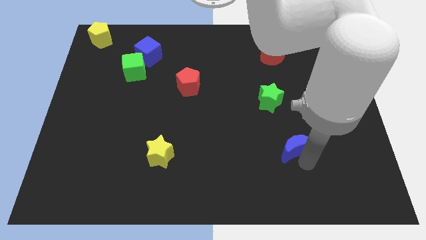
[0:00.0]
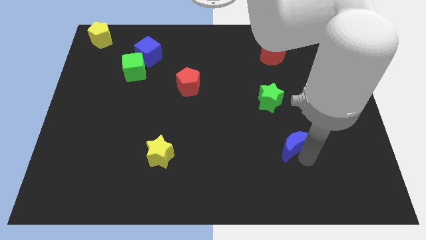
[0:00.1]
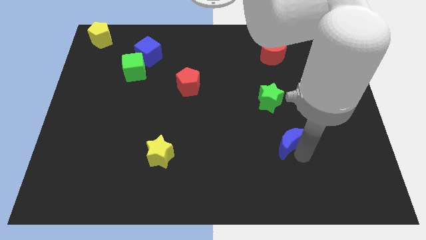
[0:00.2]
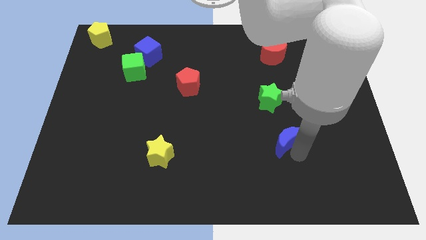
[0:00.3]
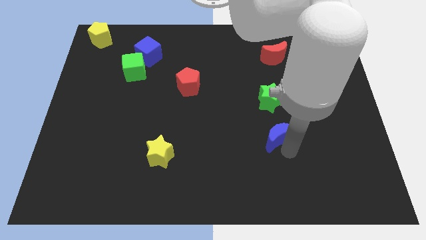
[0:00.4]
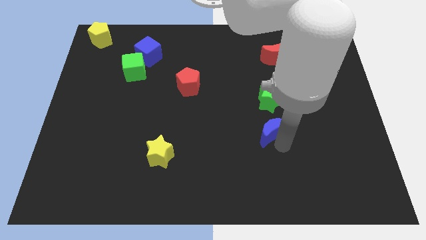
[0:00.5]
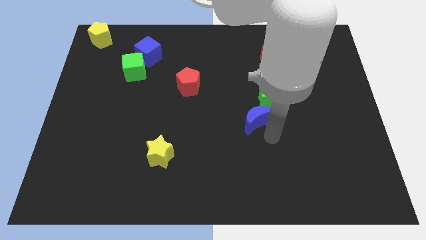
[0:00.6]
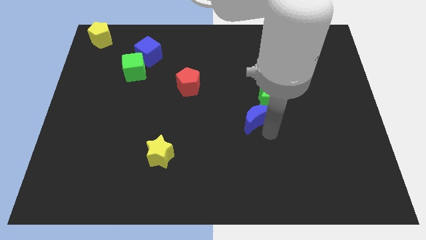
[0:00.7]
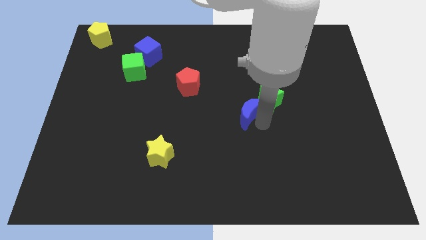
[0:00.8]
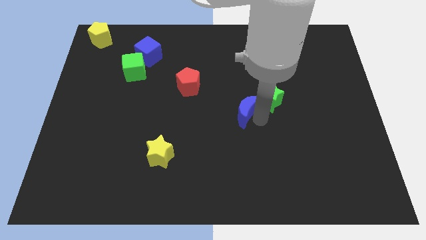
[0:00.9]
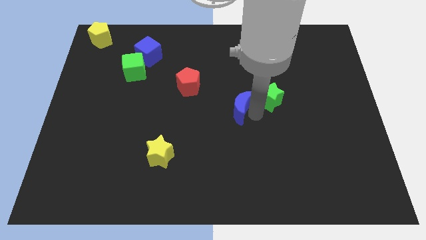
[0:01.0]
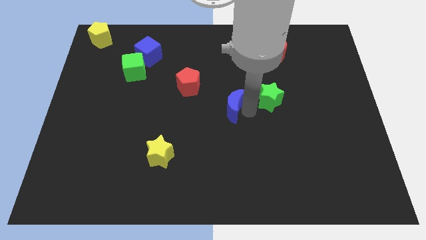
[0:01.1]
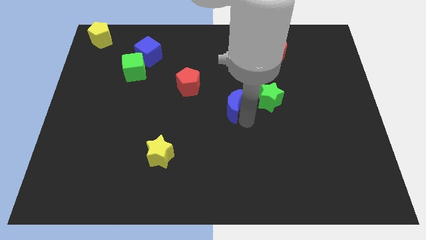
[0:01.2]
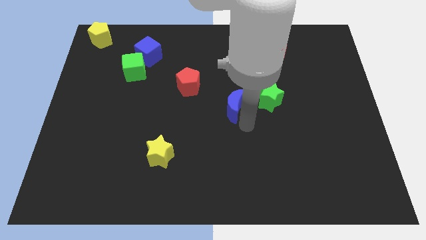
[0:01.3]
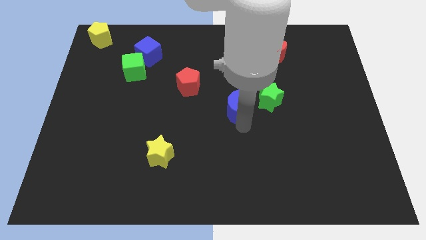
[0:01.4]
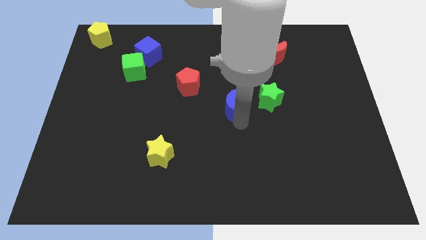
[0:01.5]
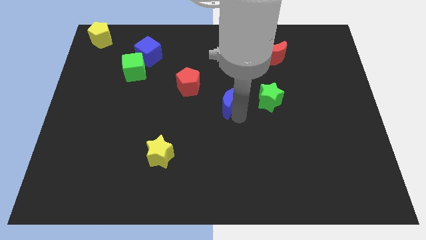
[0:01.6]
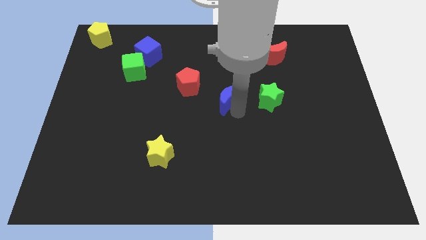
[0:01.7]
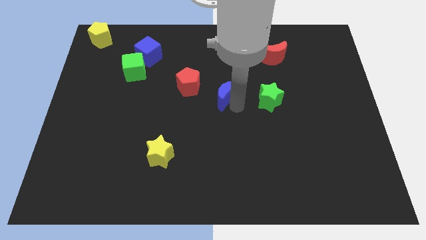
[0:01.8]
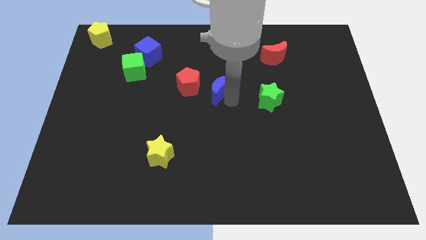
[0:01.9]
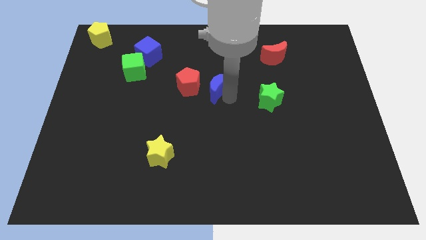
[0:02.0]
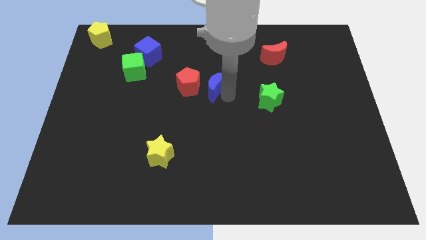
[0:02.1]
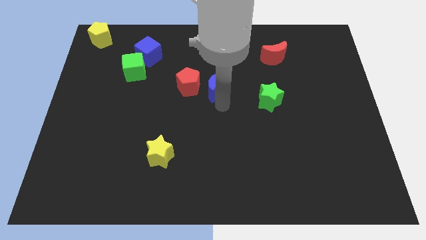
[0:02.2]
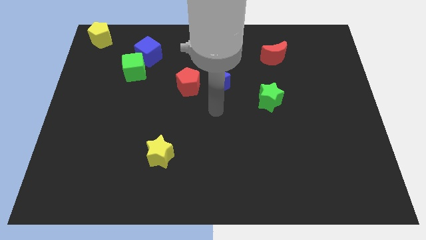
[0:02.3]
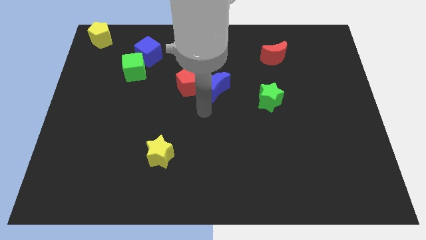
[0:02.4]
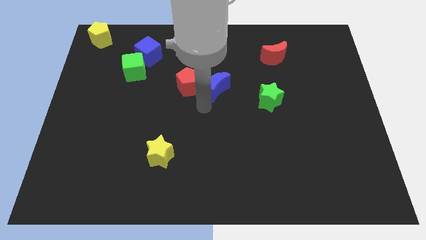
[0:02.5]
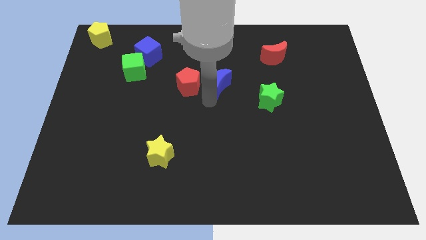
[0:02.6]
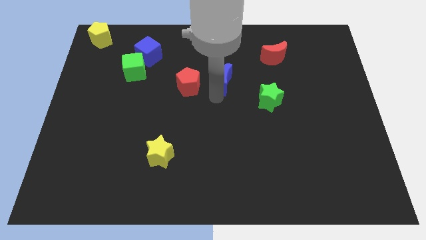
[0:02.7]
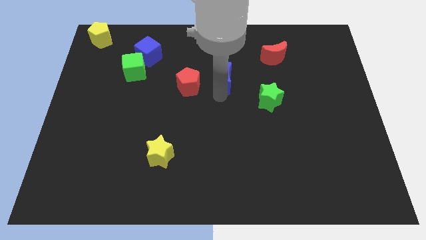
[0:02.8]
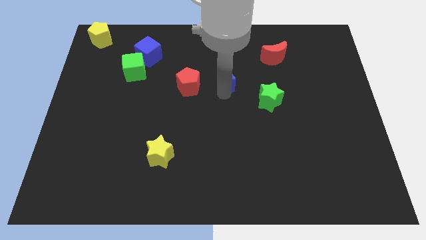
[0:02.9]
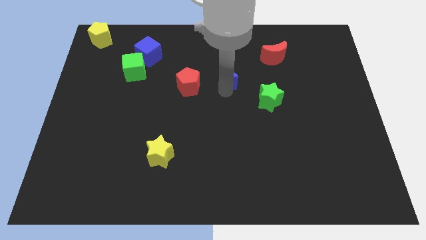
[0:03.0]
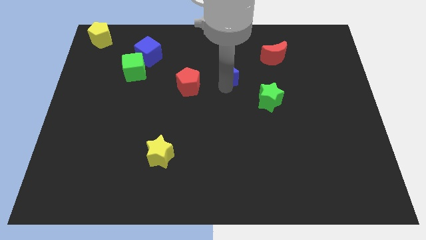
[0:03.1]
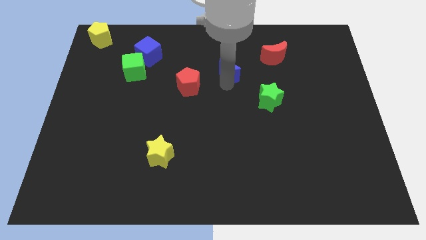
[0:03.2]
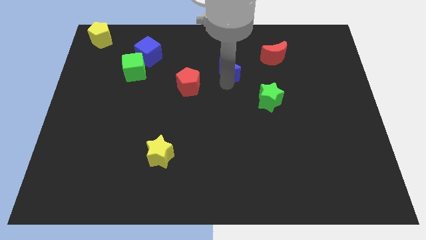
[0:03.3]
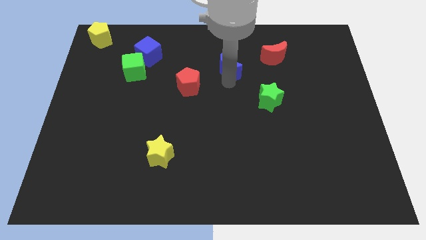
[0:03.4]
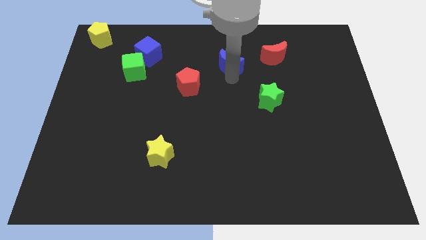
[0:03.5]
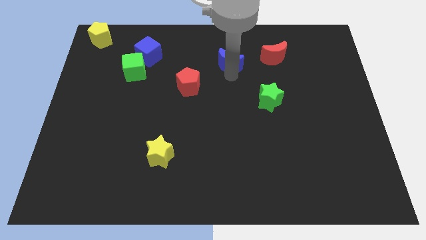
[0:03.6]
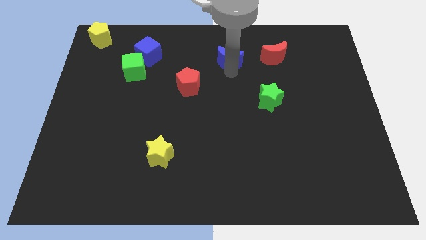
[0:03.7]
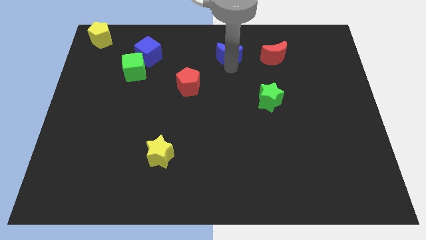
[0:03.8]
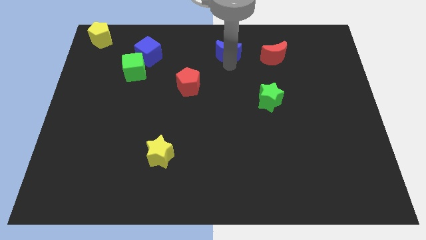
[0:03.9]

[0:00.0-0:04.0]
place the blue crescent to the left of the red crescent

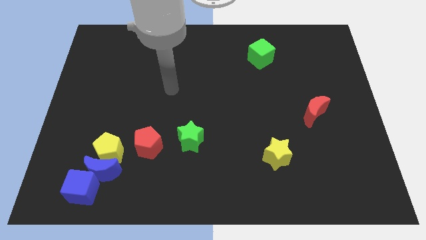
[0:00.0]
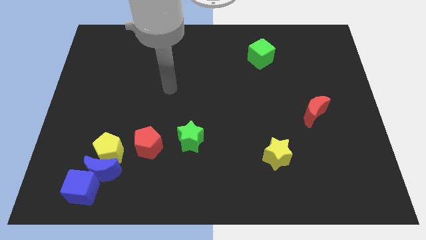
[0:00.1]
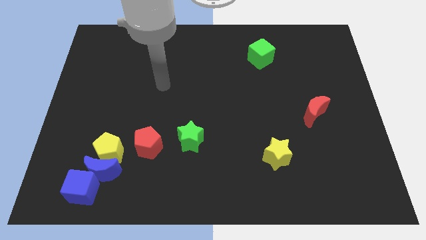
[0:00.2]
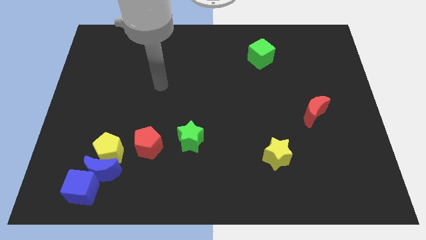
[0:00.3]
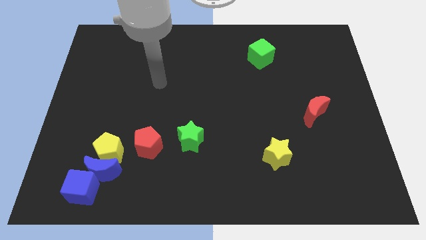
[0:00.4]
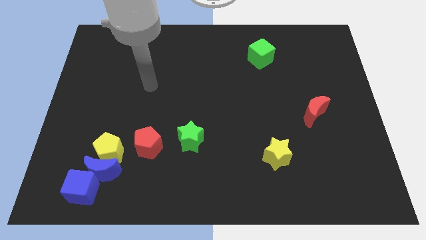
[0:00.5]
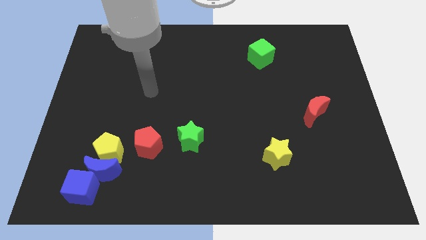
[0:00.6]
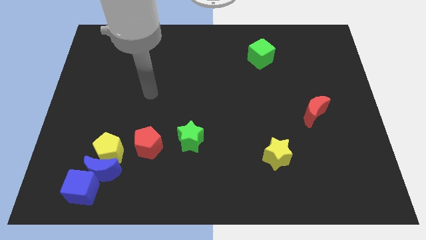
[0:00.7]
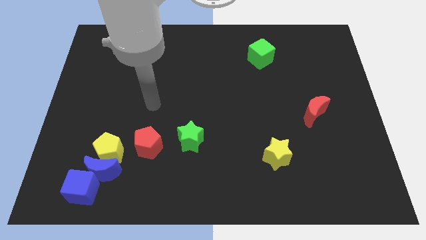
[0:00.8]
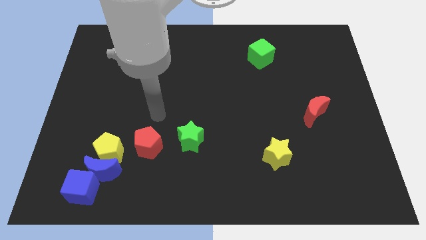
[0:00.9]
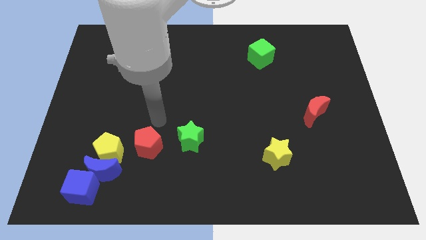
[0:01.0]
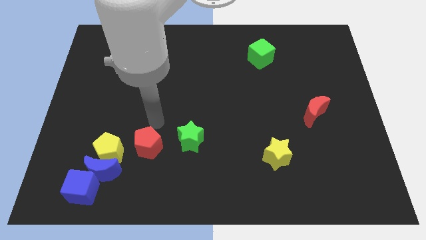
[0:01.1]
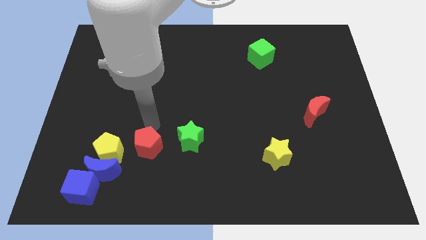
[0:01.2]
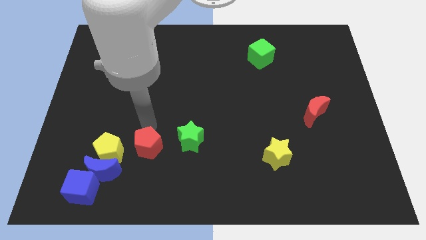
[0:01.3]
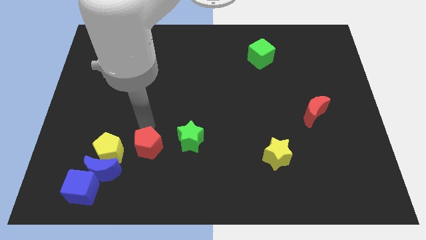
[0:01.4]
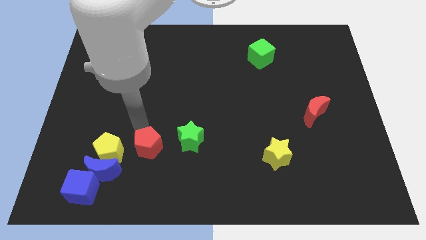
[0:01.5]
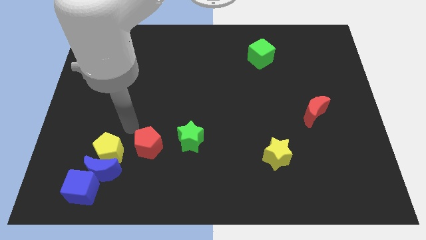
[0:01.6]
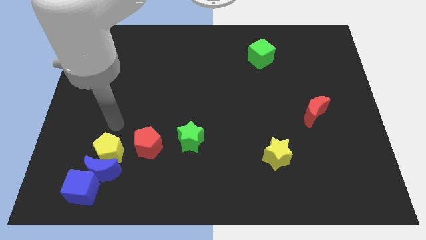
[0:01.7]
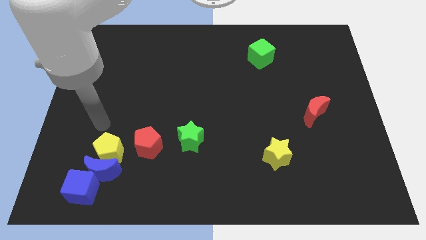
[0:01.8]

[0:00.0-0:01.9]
place the arm above the yellow pentagon

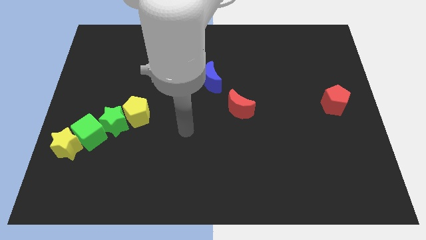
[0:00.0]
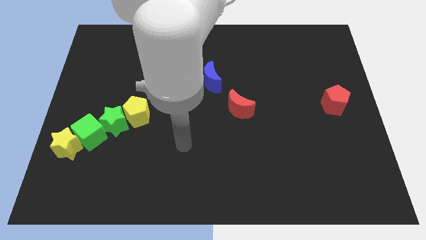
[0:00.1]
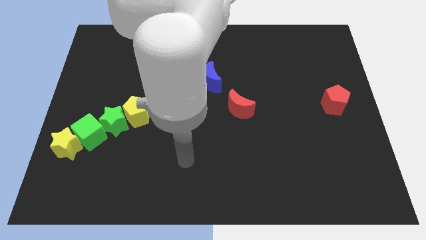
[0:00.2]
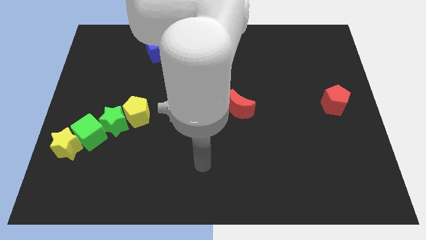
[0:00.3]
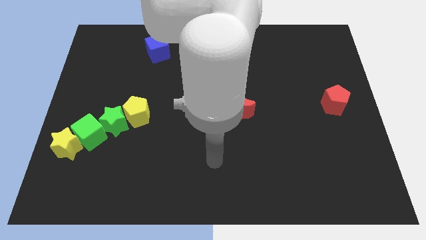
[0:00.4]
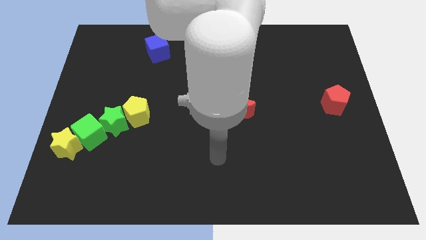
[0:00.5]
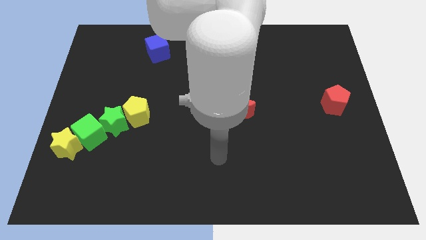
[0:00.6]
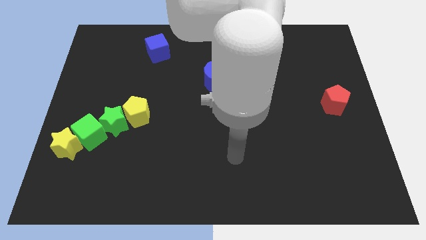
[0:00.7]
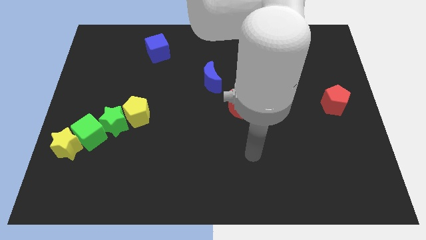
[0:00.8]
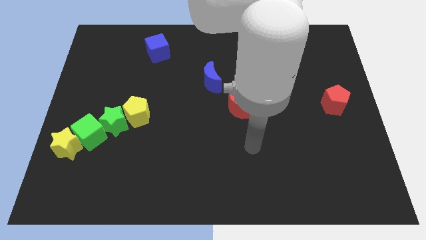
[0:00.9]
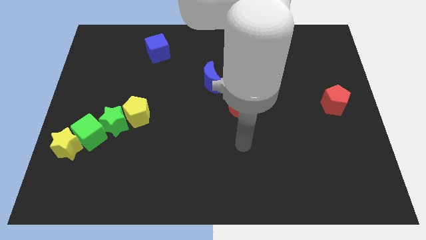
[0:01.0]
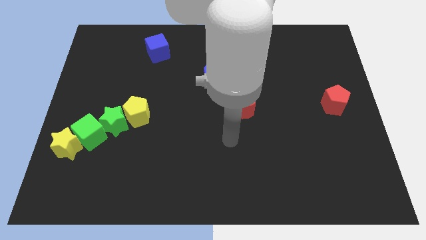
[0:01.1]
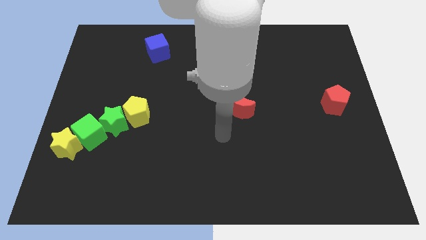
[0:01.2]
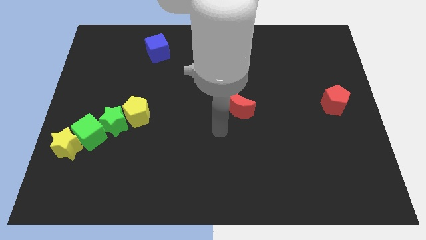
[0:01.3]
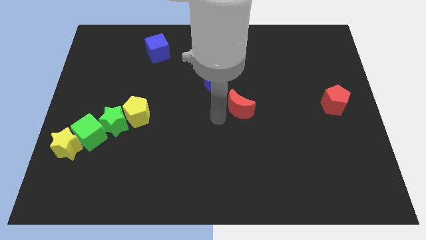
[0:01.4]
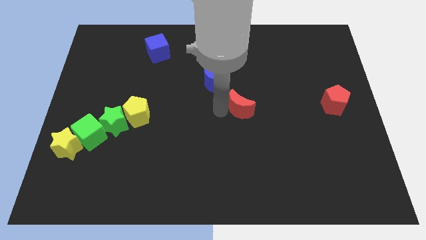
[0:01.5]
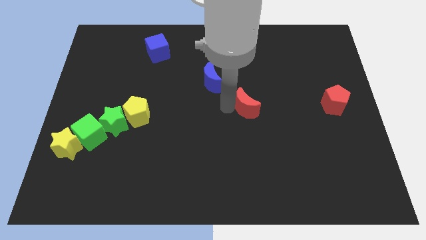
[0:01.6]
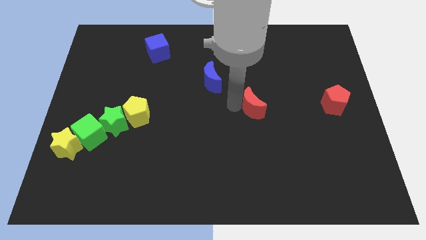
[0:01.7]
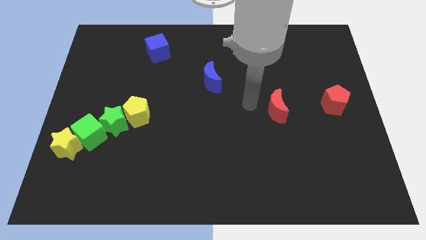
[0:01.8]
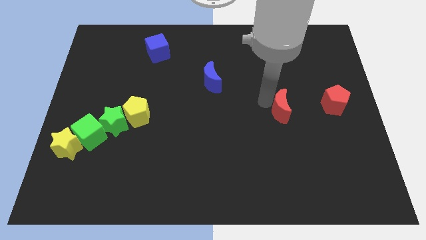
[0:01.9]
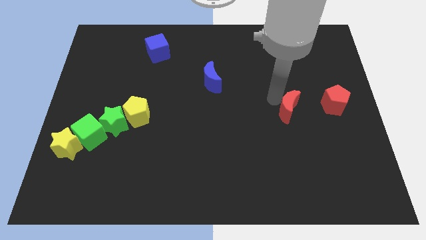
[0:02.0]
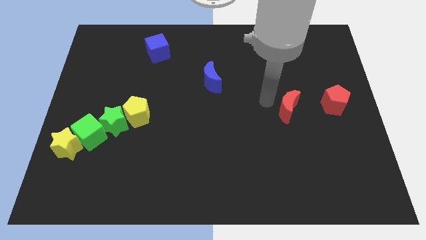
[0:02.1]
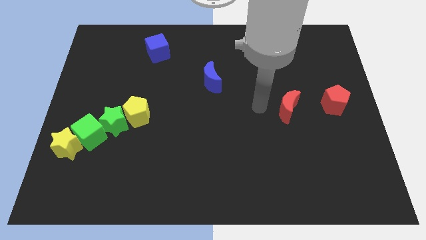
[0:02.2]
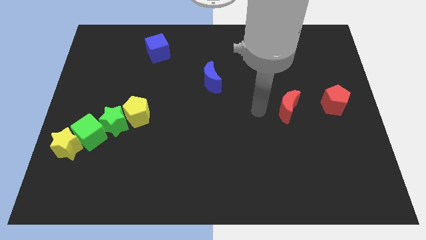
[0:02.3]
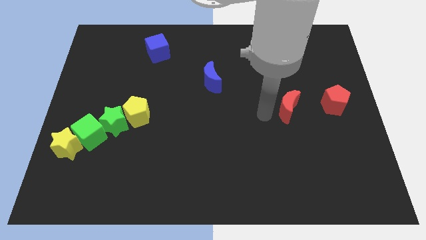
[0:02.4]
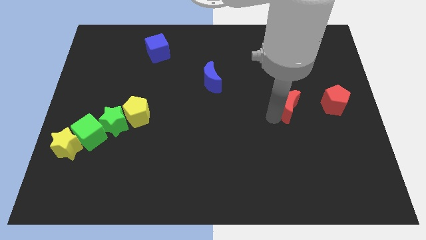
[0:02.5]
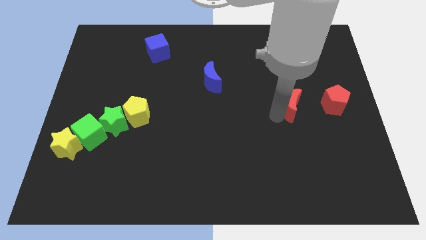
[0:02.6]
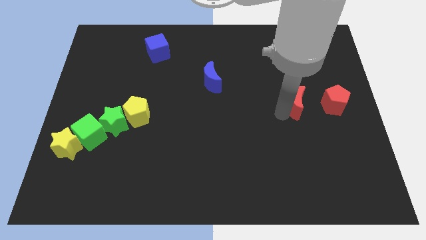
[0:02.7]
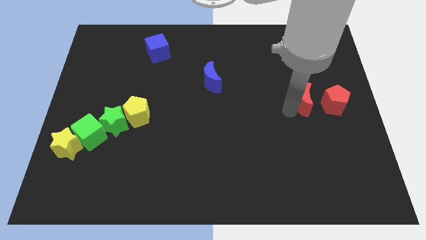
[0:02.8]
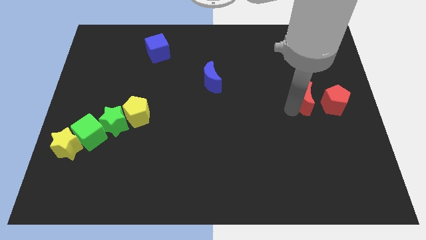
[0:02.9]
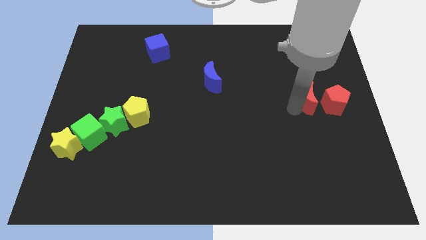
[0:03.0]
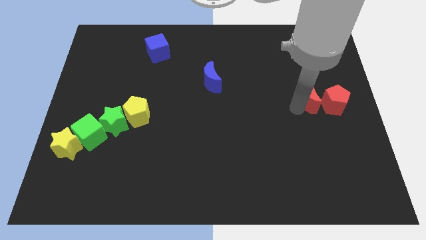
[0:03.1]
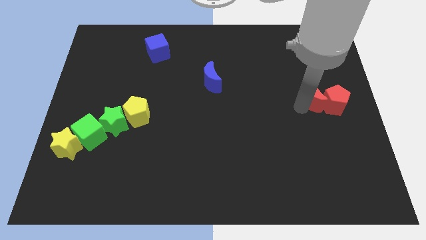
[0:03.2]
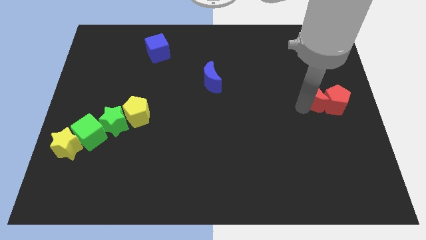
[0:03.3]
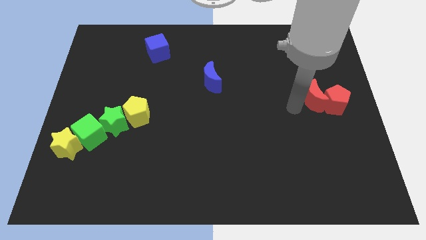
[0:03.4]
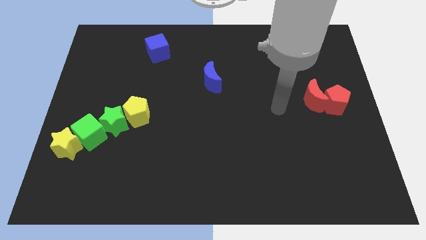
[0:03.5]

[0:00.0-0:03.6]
push the red moon into the red pentagon
